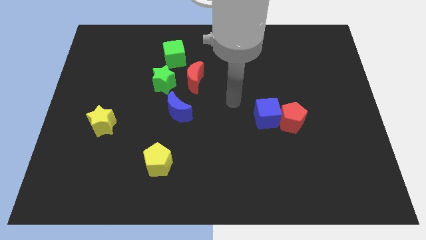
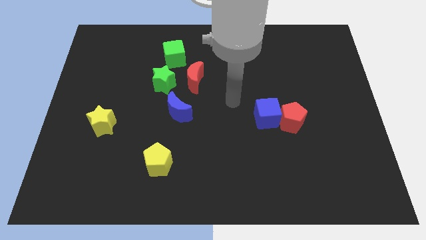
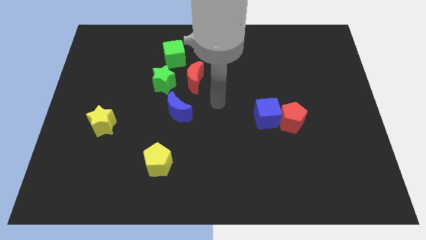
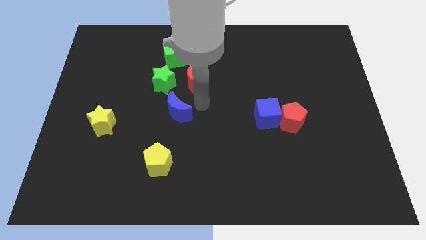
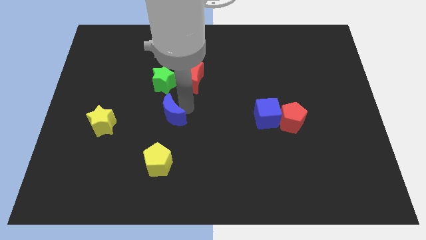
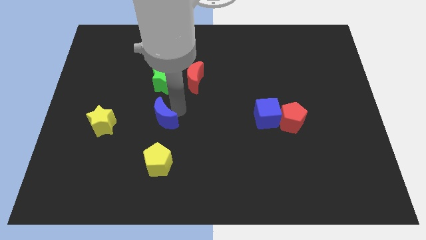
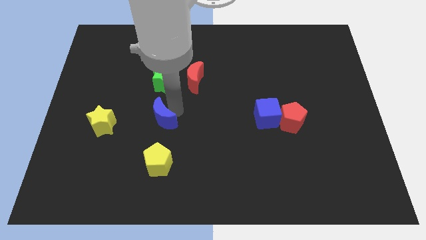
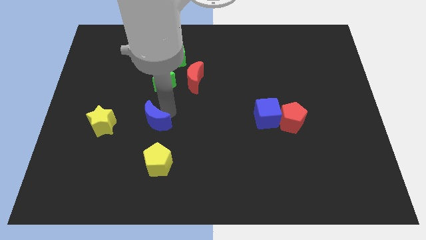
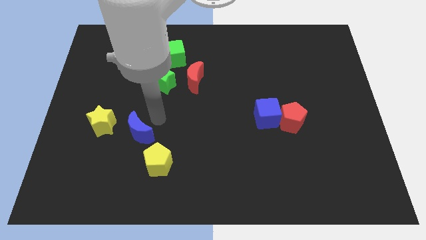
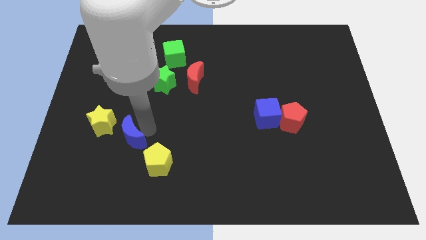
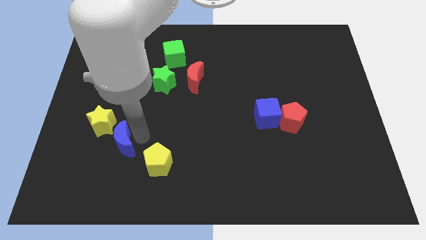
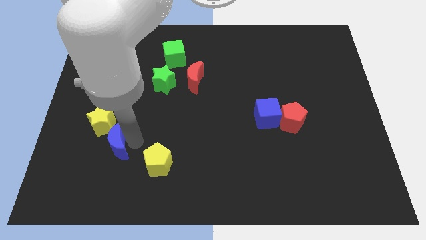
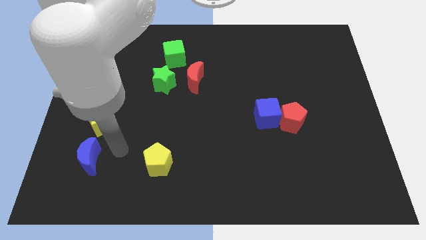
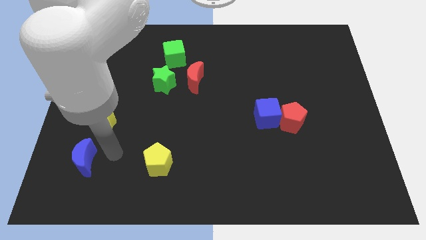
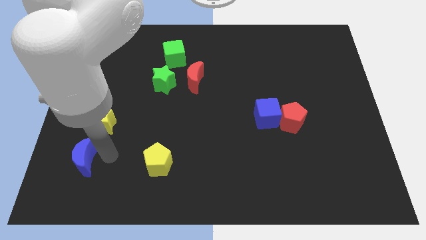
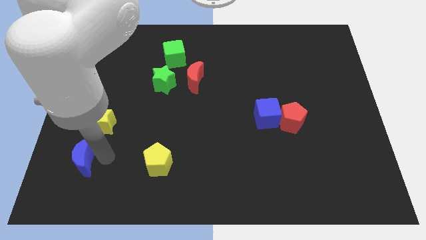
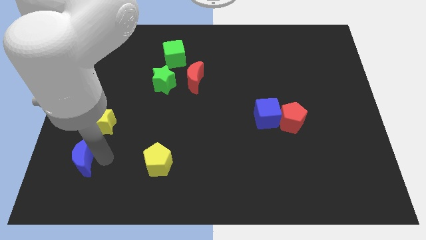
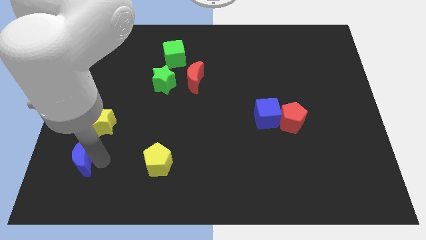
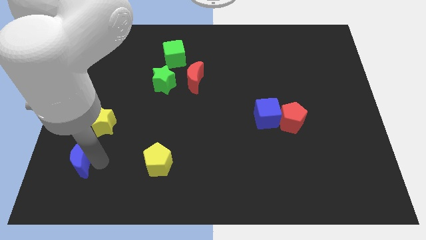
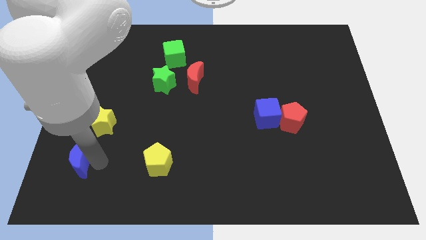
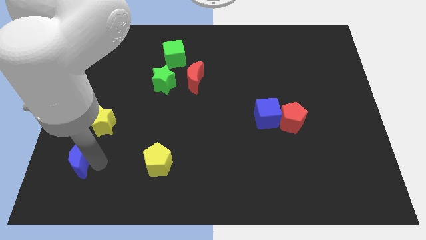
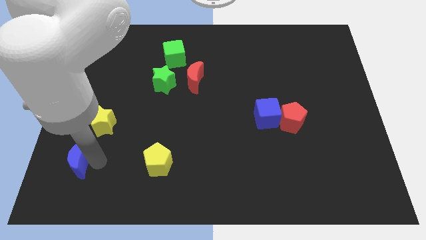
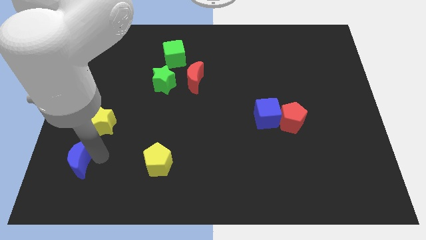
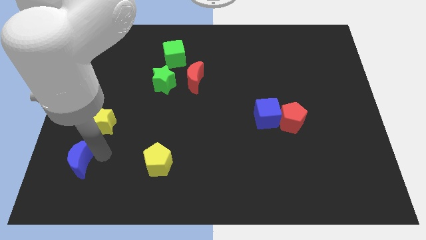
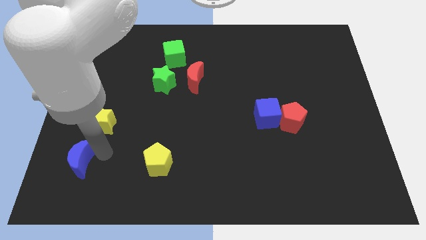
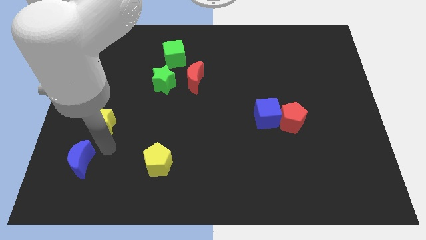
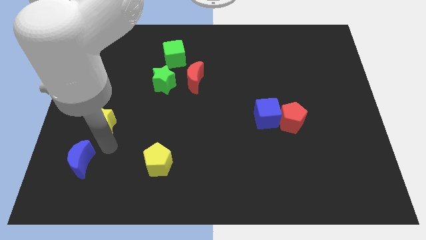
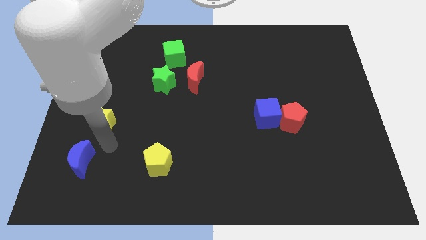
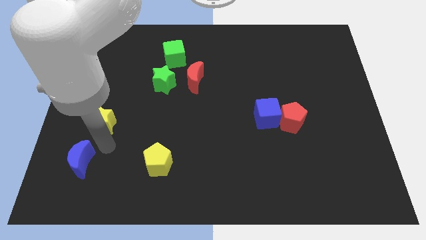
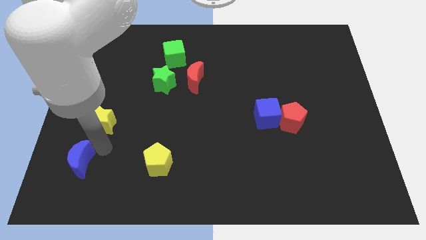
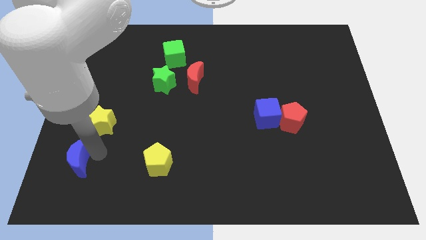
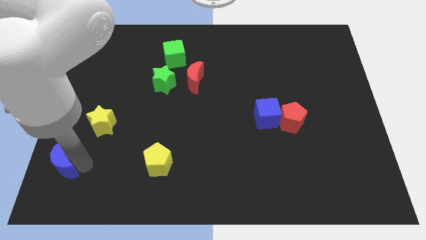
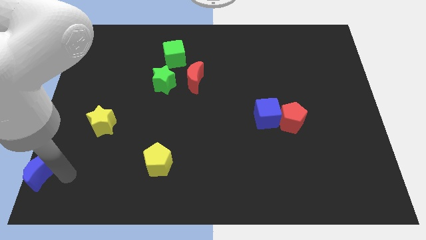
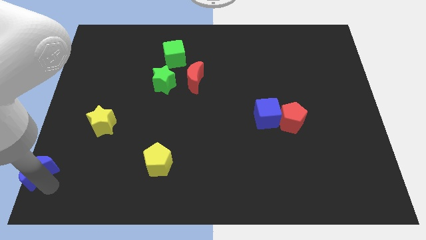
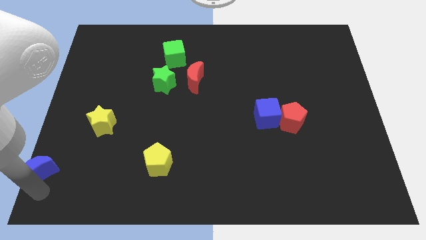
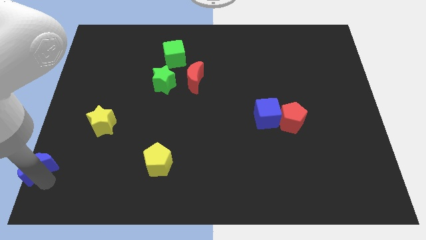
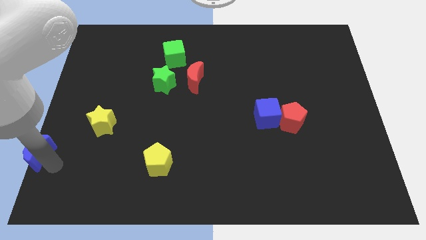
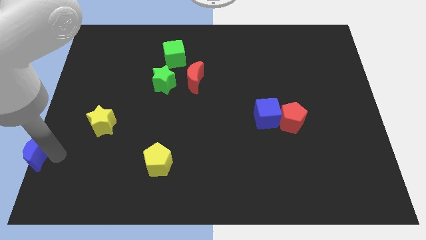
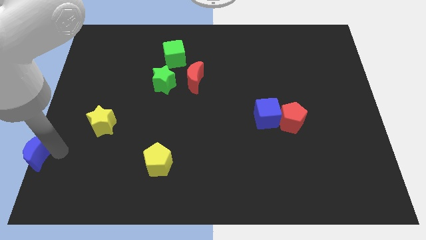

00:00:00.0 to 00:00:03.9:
move the blue crescent towards the bottom left of the board

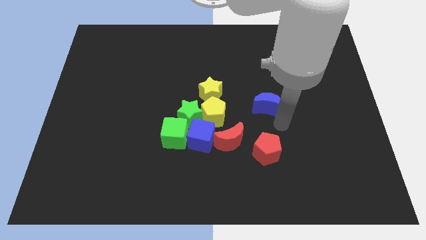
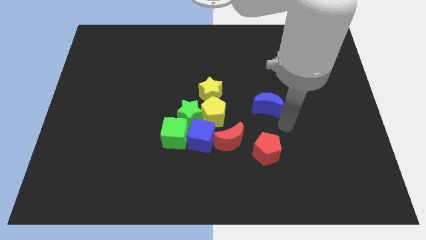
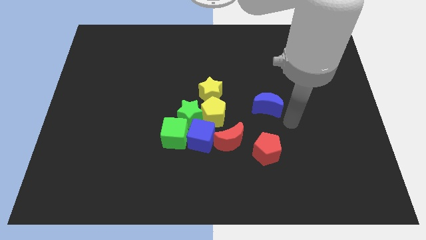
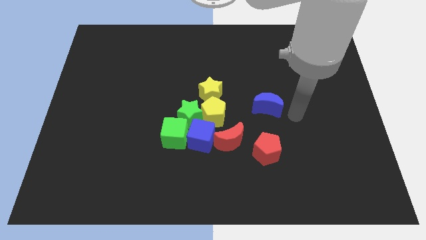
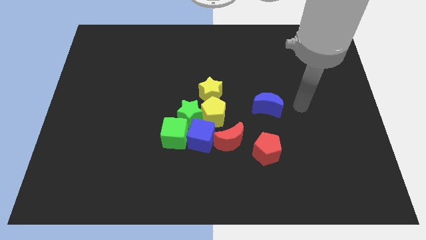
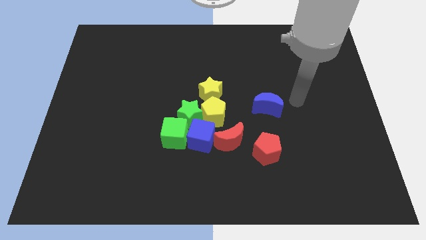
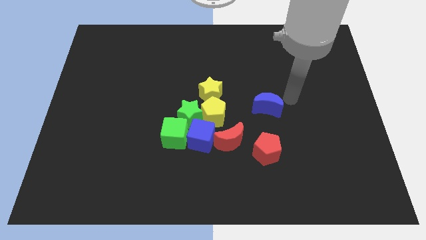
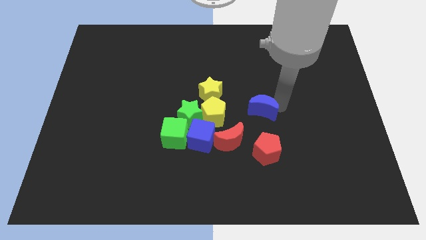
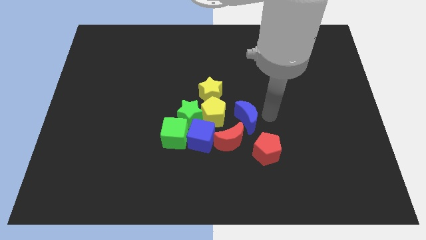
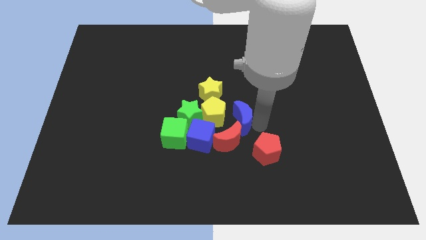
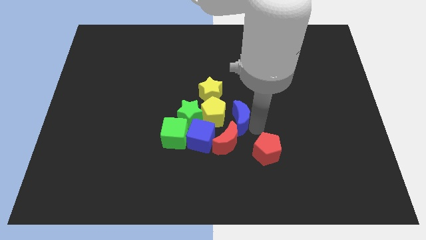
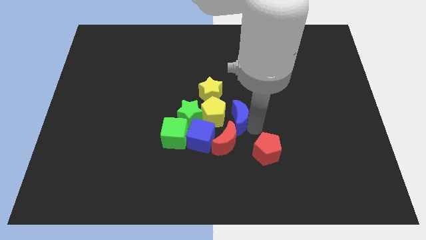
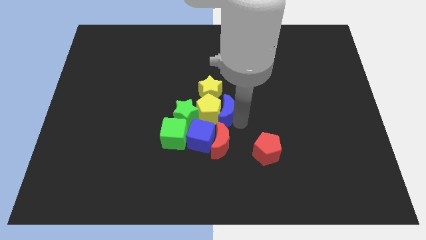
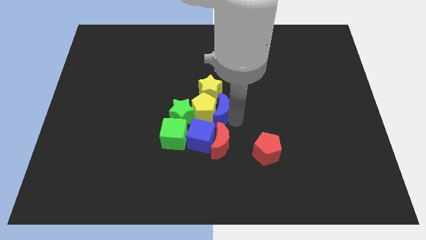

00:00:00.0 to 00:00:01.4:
push the blue moon into the yellow pentagon

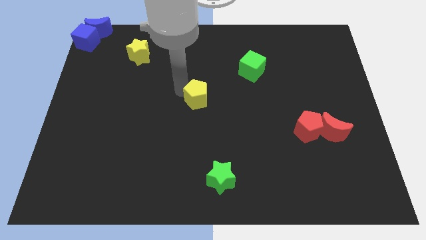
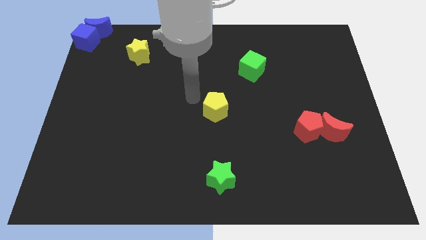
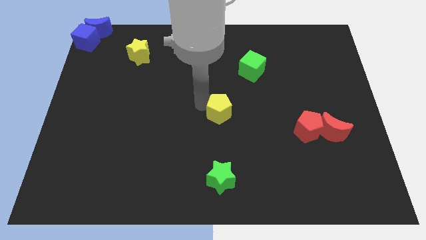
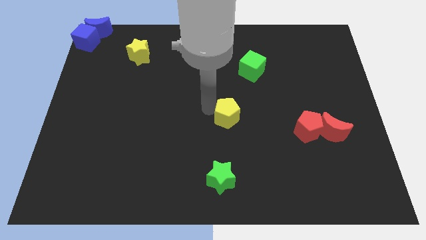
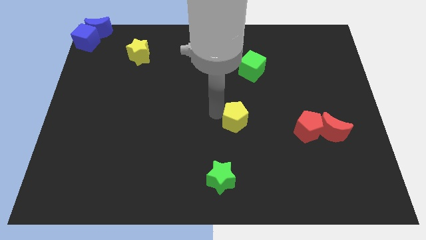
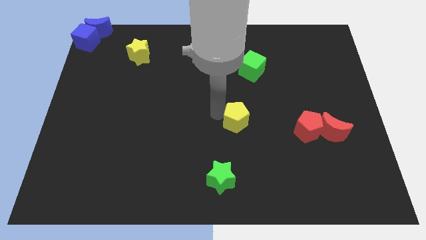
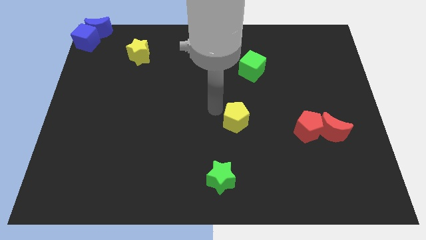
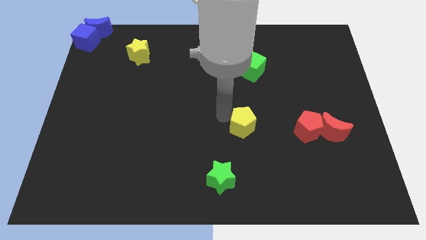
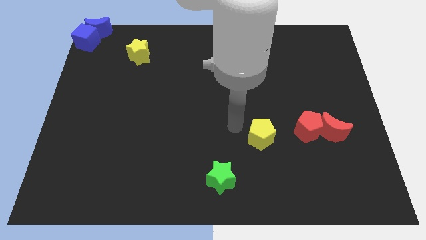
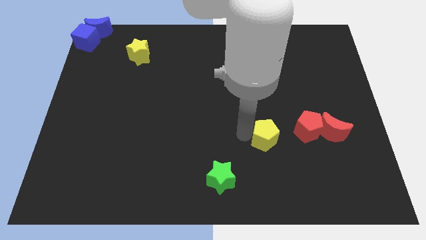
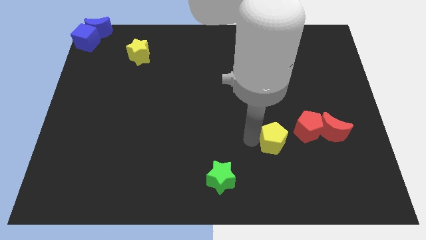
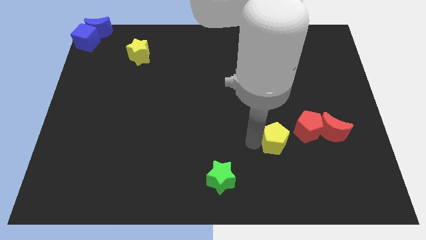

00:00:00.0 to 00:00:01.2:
push the yellow pentagon to the left of the red pentagon

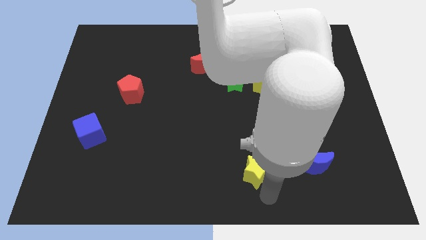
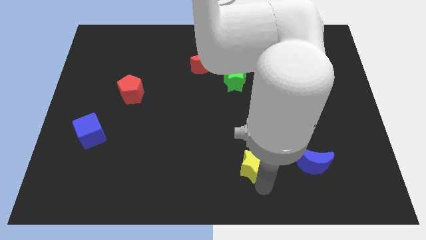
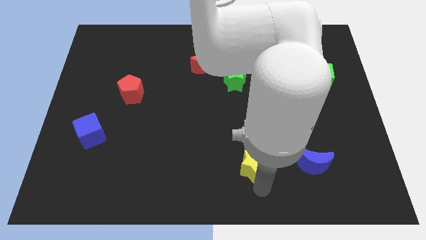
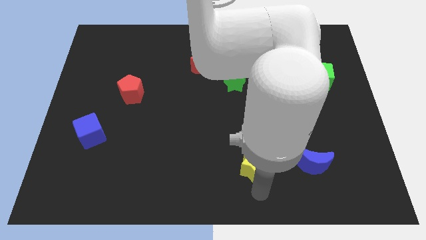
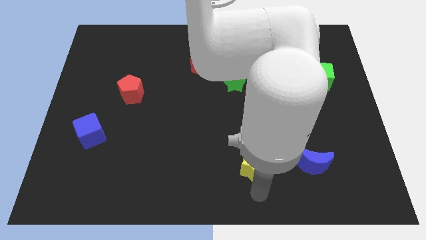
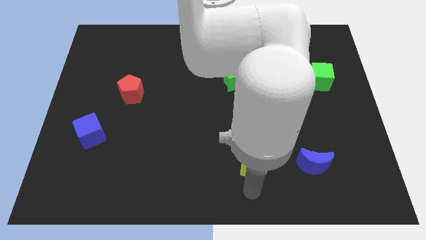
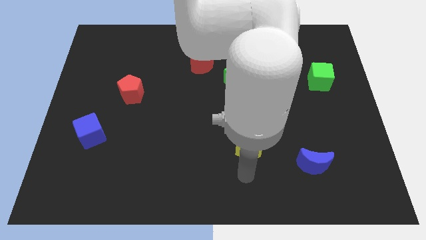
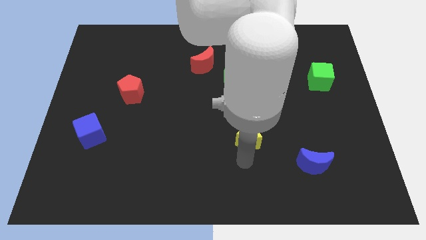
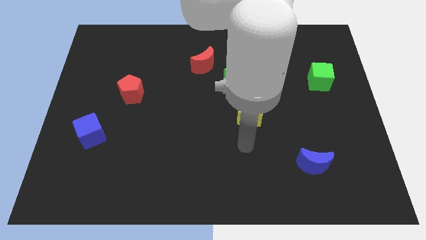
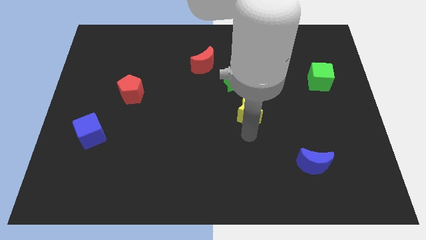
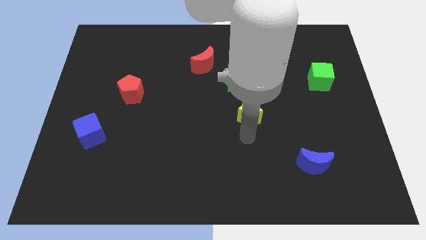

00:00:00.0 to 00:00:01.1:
drag the yellow star to the top of the board

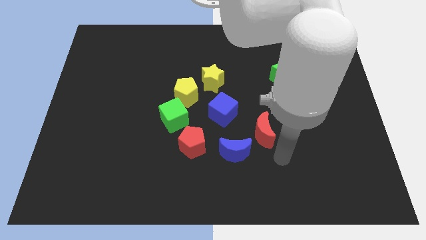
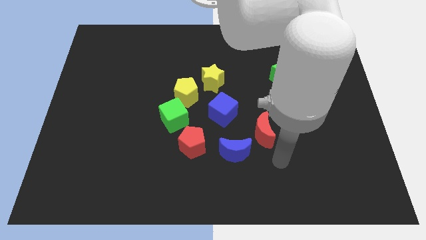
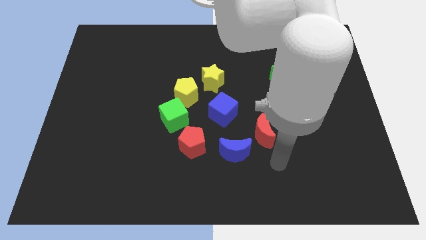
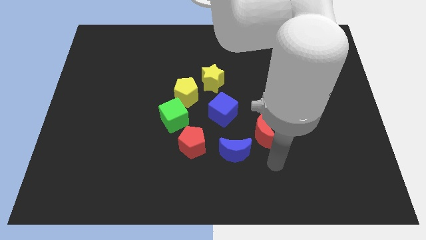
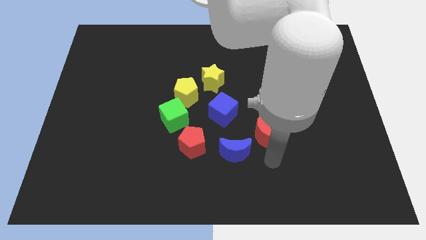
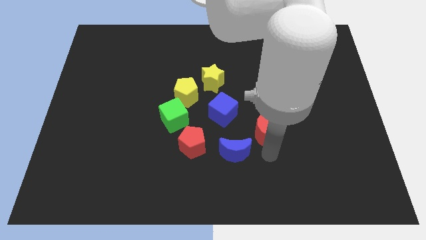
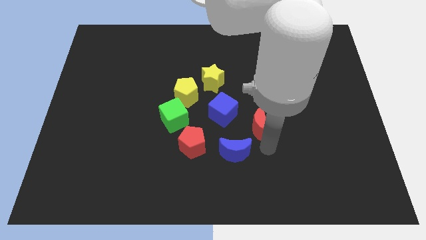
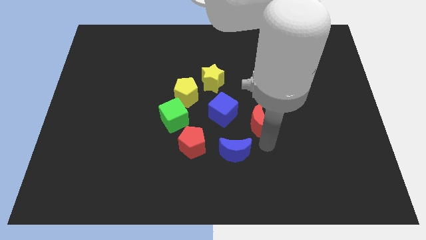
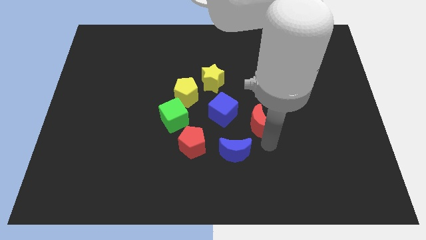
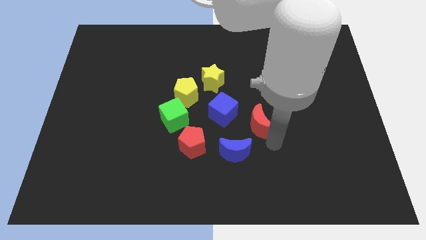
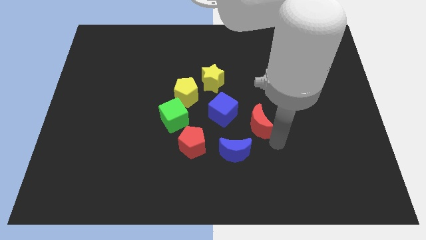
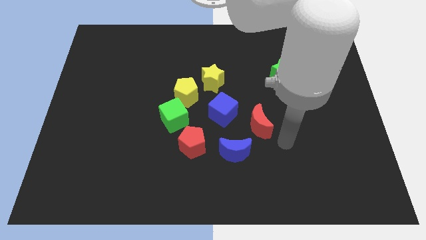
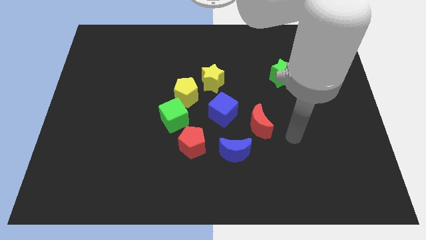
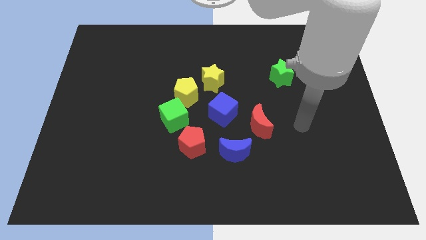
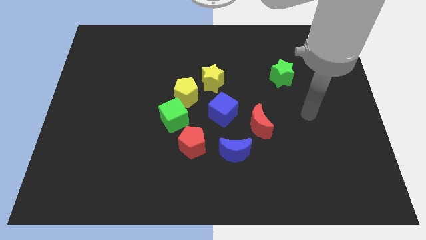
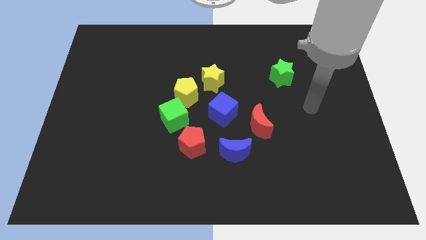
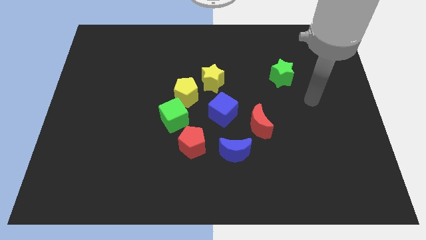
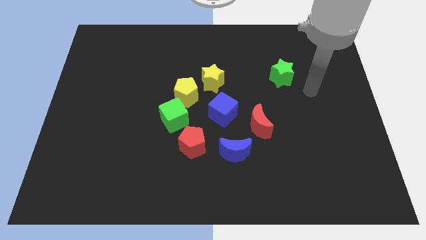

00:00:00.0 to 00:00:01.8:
place the red crescent slightly towards the center of the board
